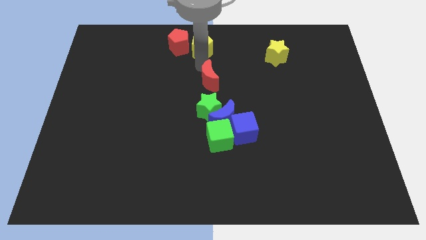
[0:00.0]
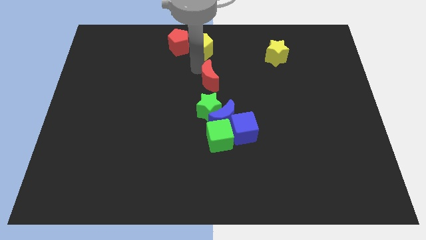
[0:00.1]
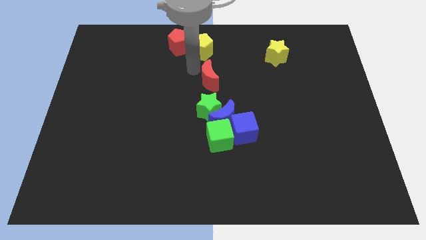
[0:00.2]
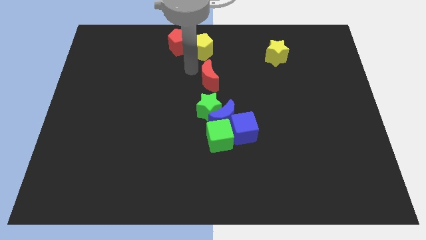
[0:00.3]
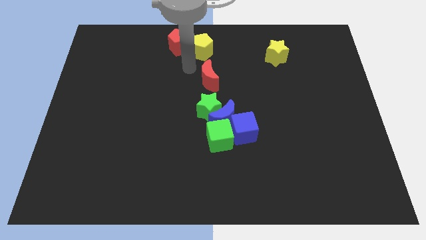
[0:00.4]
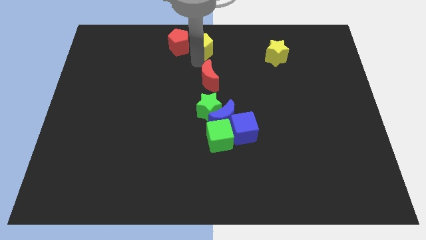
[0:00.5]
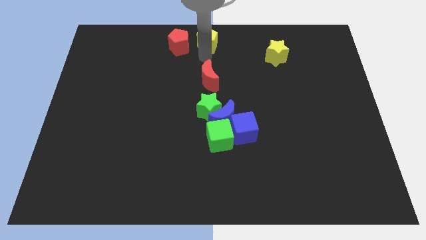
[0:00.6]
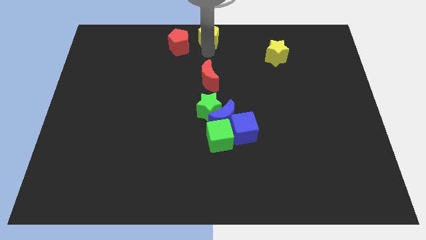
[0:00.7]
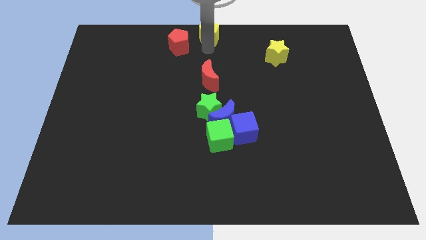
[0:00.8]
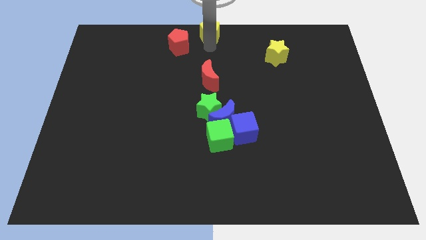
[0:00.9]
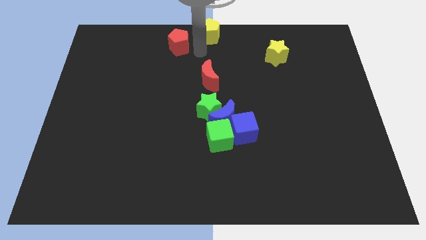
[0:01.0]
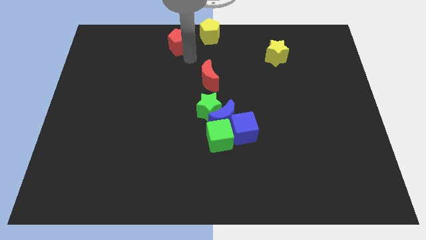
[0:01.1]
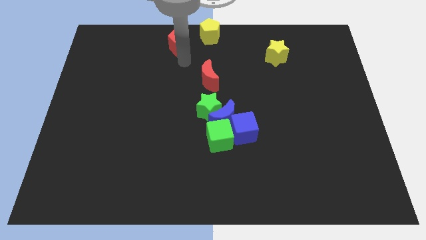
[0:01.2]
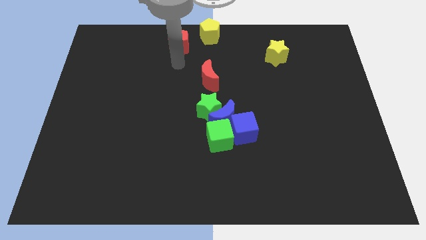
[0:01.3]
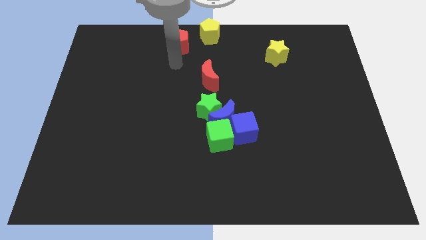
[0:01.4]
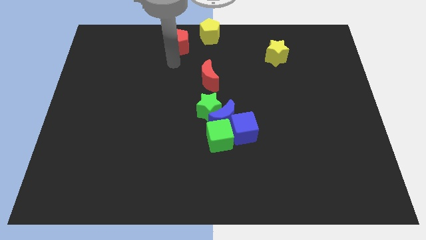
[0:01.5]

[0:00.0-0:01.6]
place the yellow pentagon at the top center

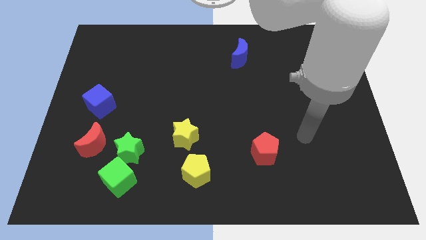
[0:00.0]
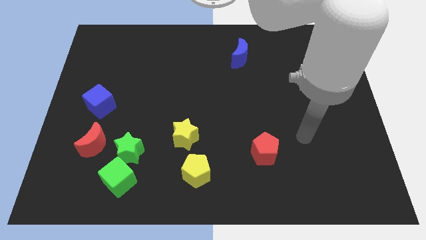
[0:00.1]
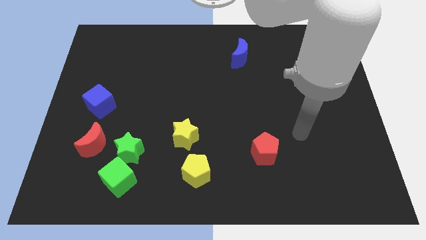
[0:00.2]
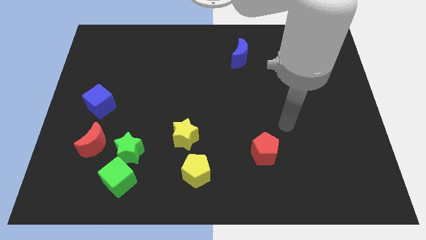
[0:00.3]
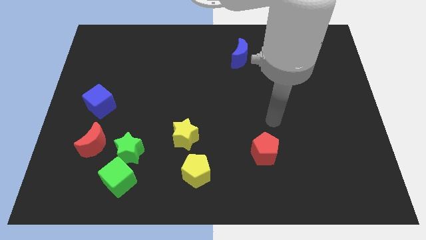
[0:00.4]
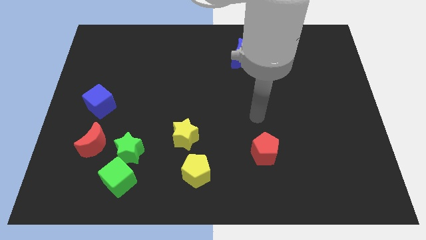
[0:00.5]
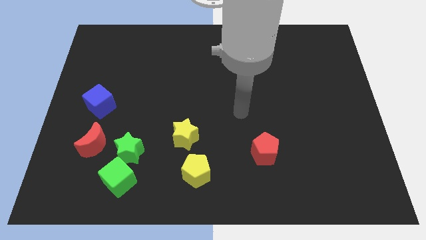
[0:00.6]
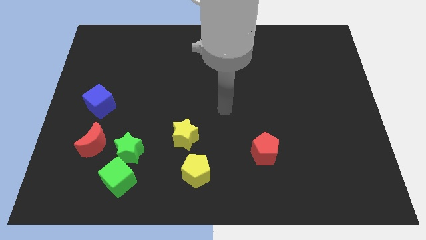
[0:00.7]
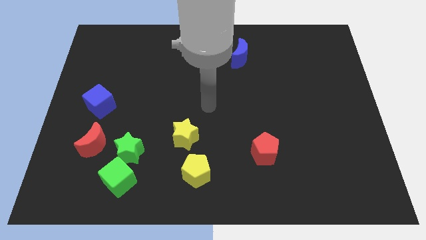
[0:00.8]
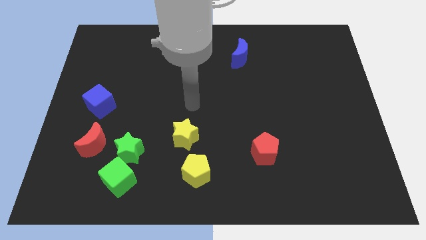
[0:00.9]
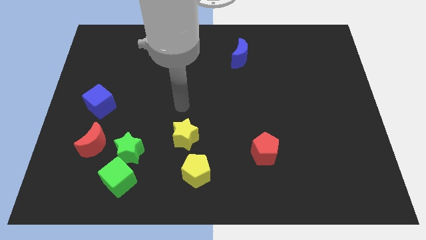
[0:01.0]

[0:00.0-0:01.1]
place your arm at the top of the yellow star

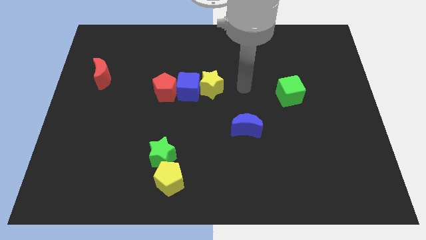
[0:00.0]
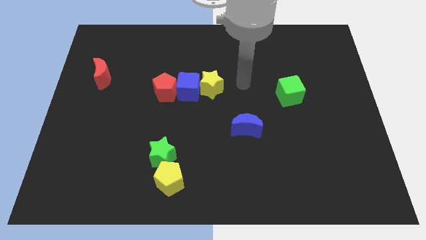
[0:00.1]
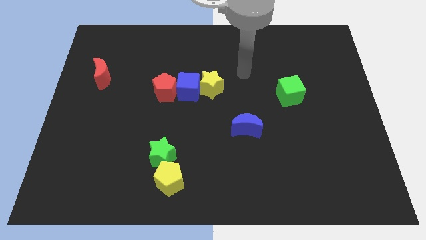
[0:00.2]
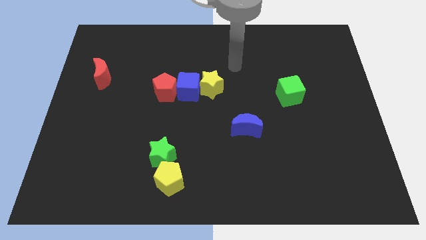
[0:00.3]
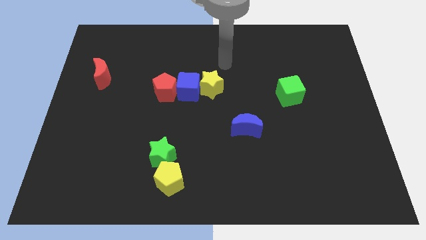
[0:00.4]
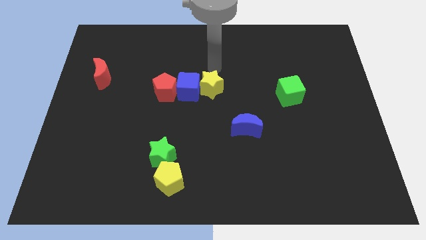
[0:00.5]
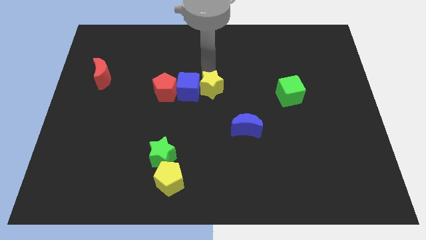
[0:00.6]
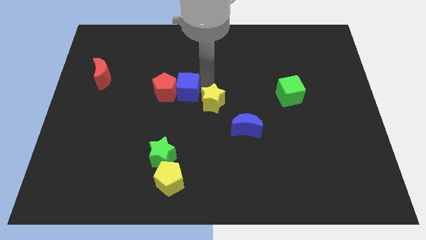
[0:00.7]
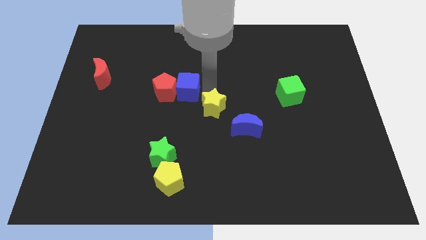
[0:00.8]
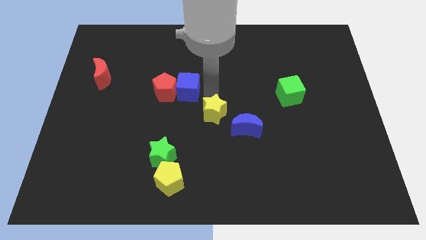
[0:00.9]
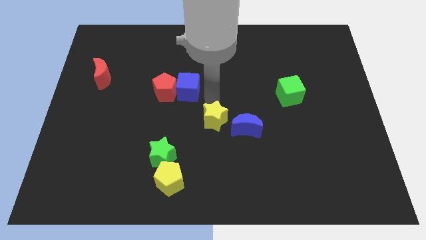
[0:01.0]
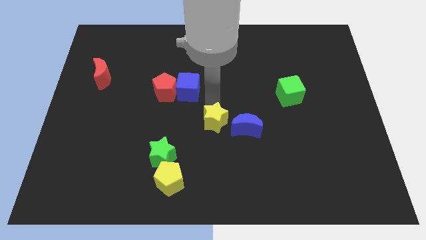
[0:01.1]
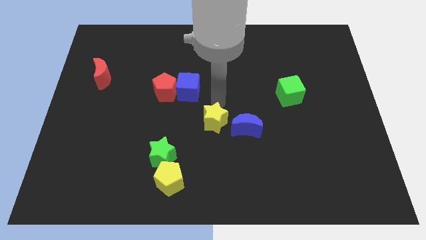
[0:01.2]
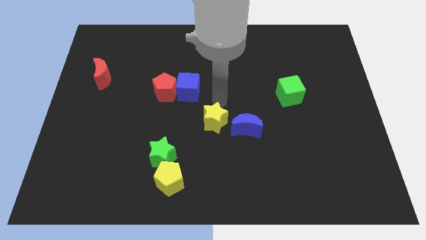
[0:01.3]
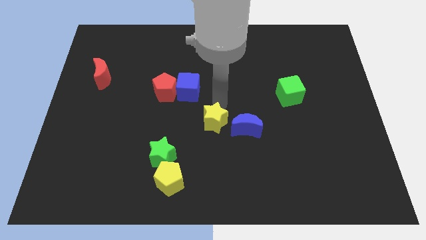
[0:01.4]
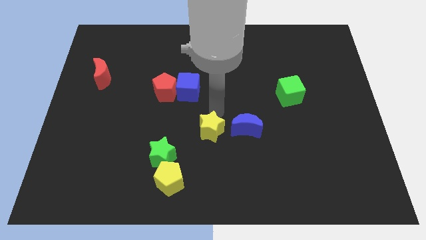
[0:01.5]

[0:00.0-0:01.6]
place the yellow star to left side of the blue moon

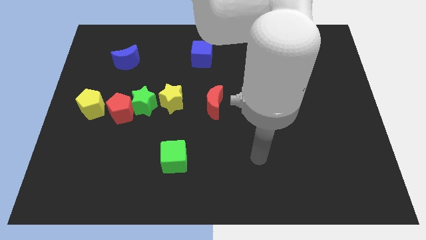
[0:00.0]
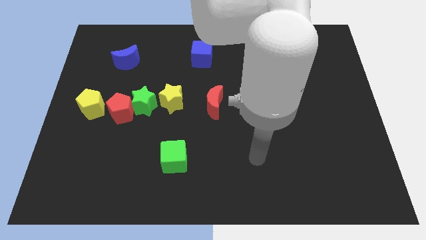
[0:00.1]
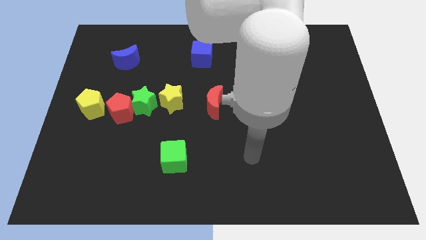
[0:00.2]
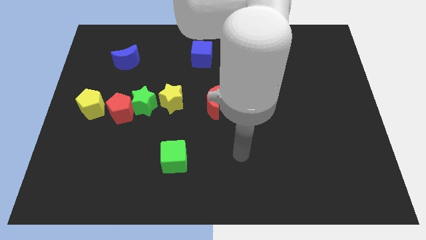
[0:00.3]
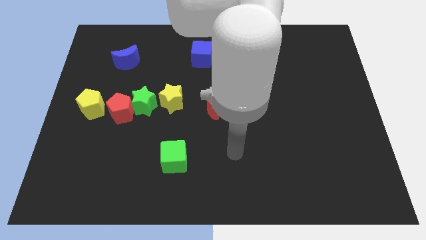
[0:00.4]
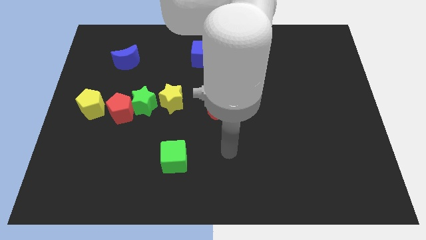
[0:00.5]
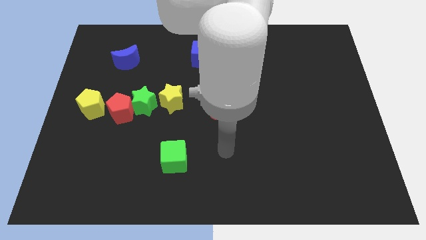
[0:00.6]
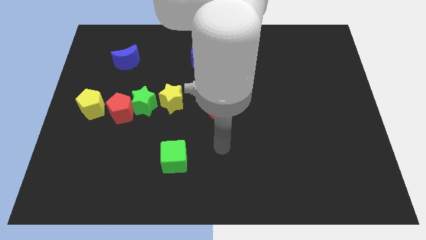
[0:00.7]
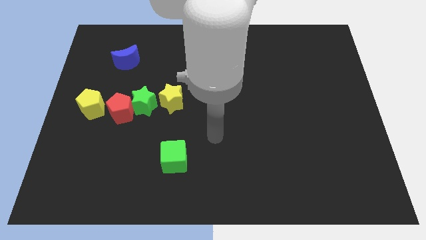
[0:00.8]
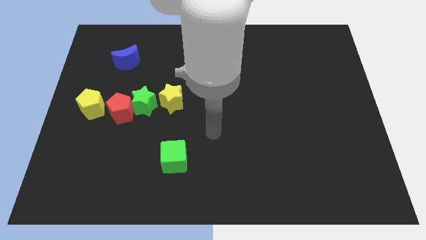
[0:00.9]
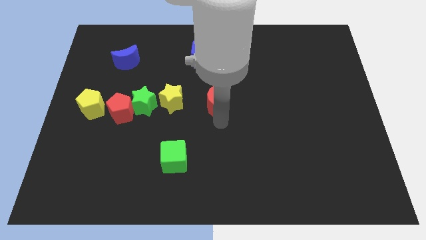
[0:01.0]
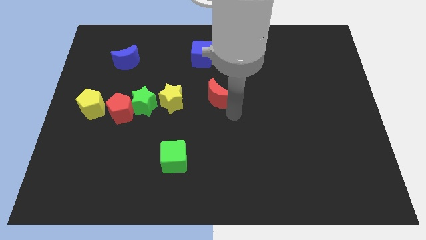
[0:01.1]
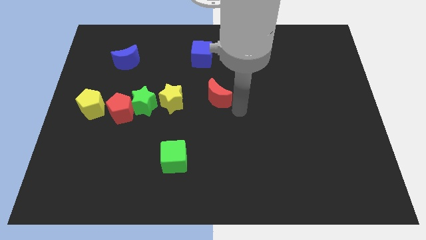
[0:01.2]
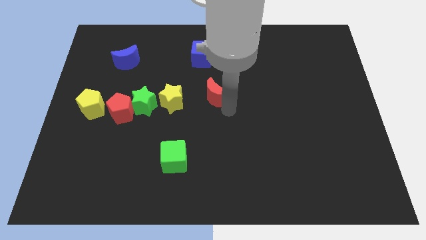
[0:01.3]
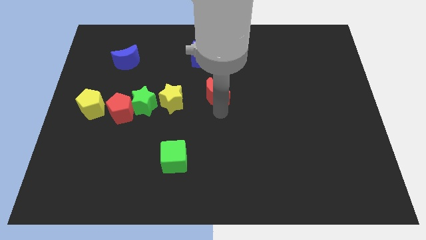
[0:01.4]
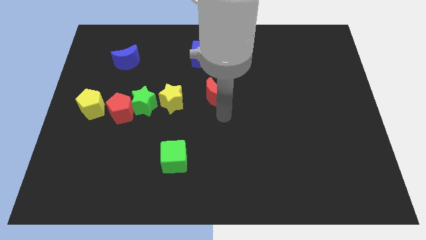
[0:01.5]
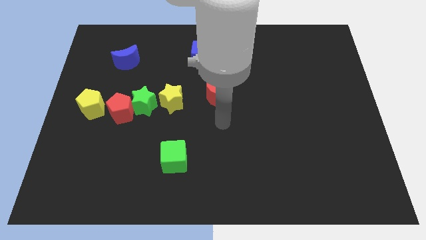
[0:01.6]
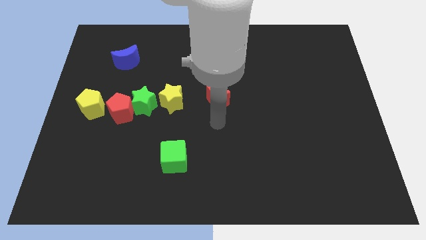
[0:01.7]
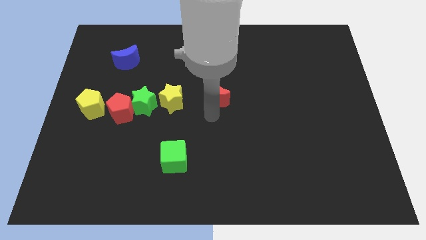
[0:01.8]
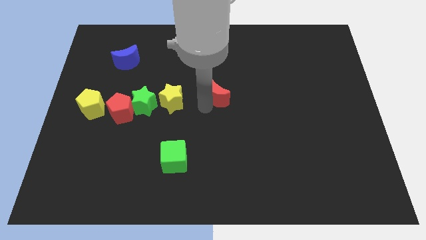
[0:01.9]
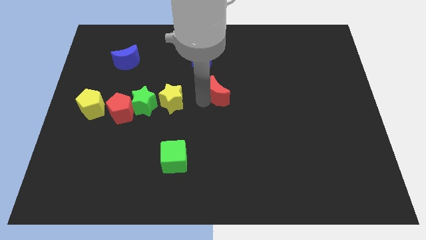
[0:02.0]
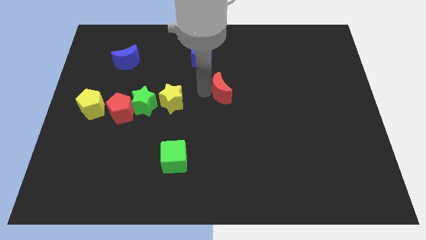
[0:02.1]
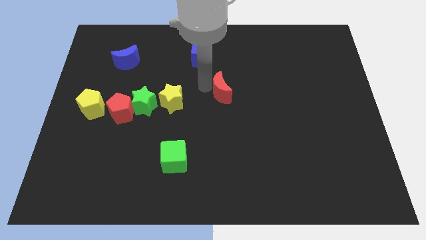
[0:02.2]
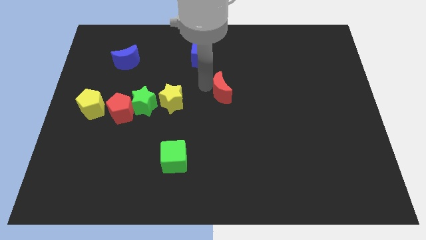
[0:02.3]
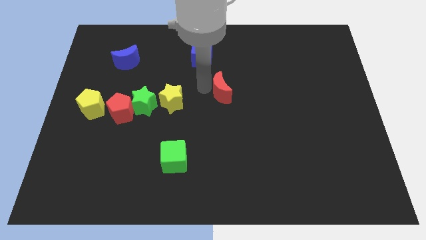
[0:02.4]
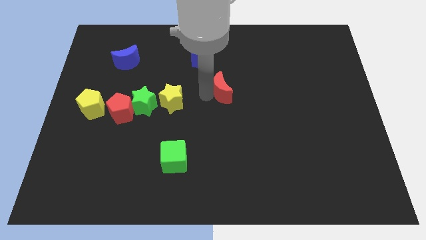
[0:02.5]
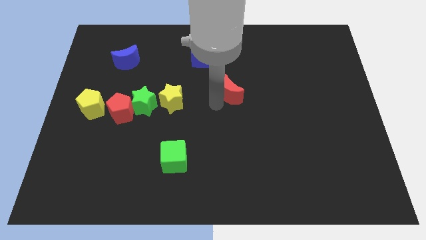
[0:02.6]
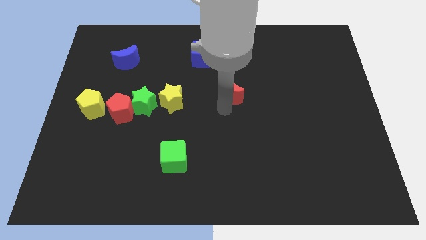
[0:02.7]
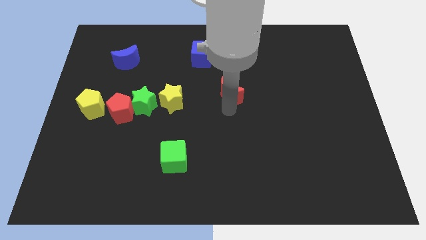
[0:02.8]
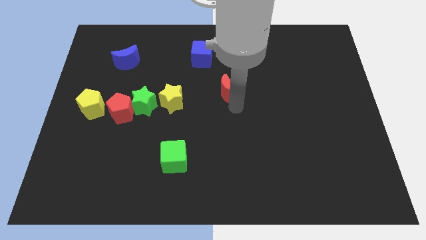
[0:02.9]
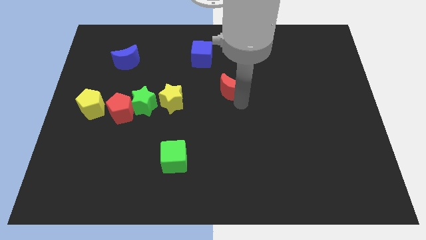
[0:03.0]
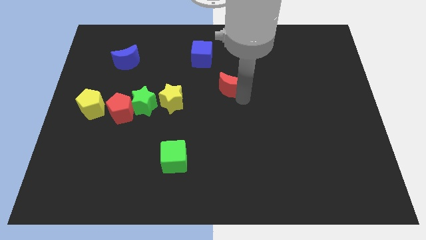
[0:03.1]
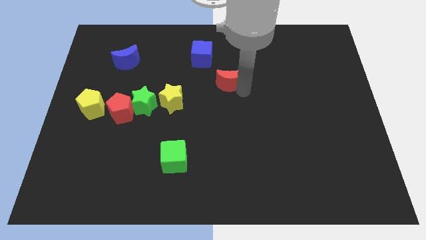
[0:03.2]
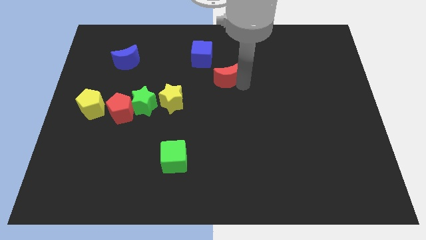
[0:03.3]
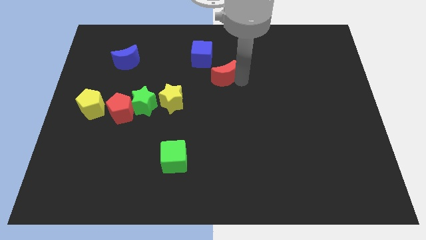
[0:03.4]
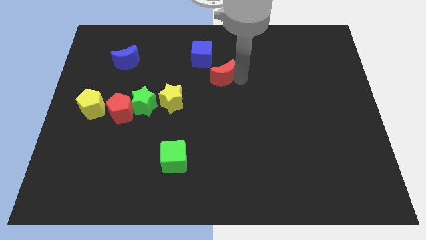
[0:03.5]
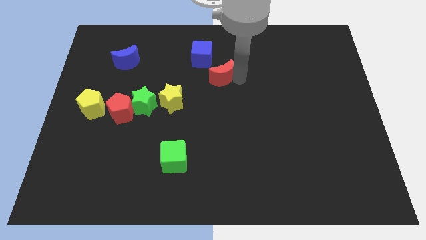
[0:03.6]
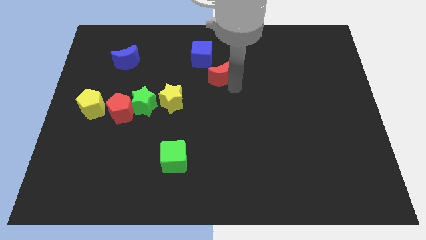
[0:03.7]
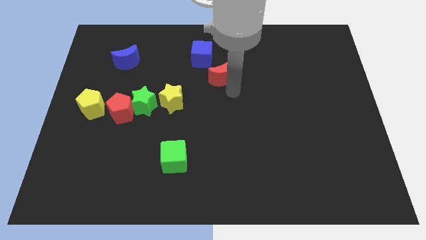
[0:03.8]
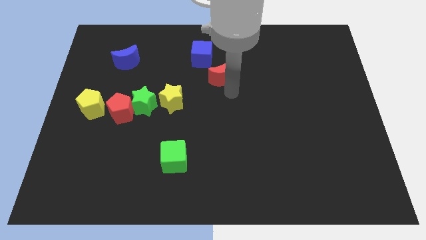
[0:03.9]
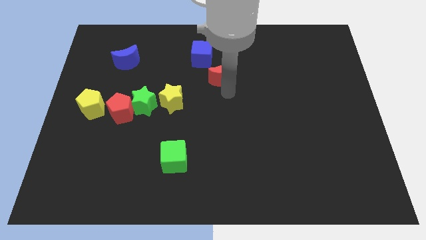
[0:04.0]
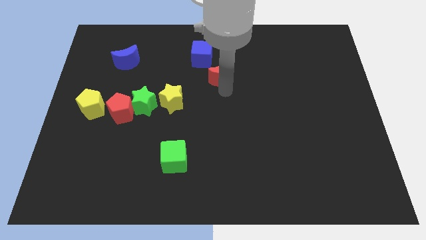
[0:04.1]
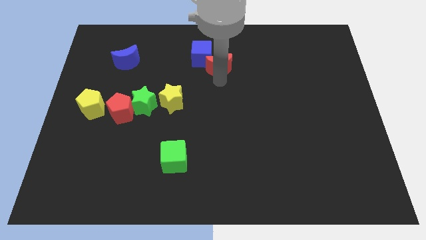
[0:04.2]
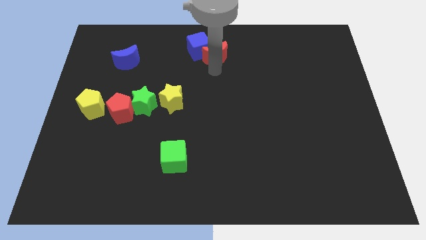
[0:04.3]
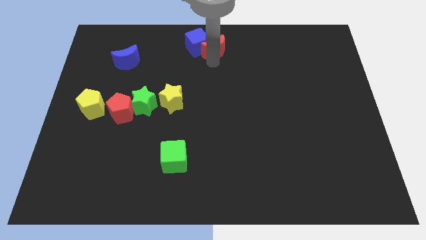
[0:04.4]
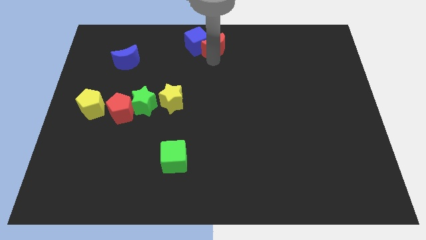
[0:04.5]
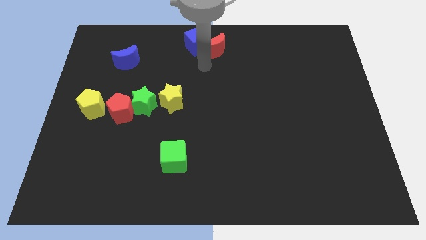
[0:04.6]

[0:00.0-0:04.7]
place red crescent below the blue block
